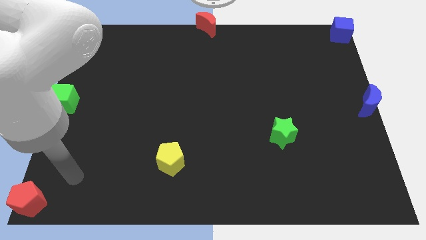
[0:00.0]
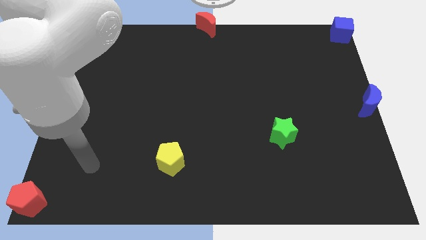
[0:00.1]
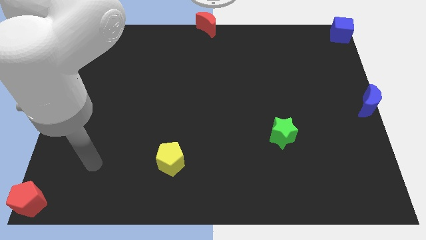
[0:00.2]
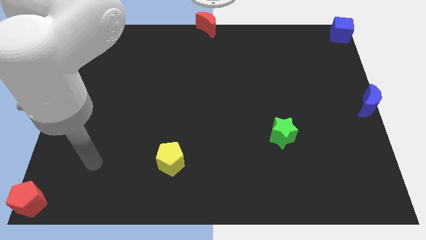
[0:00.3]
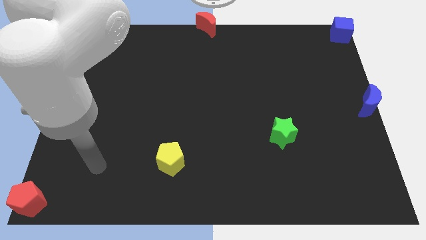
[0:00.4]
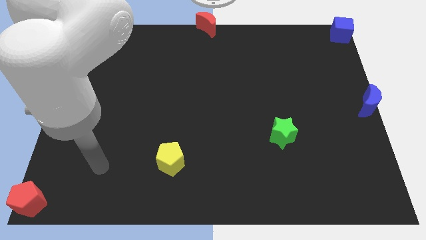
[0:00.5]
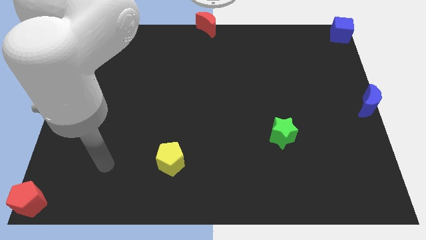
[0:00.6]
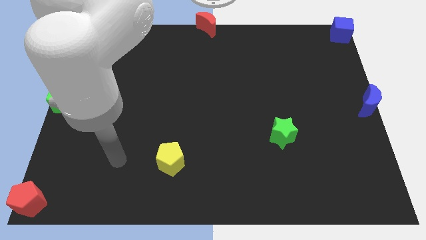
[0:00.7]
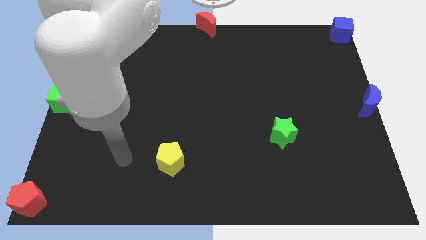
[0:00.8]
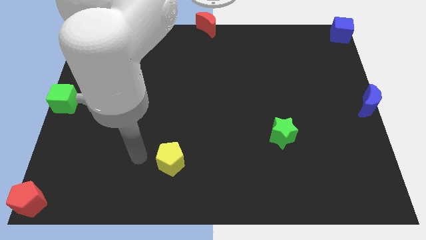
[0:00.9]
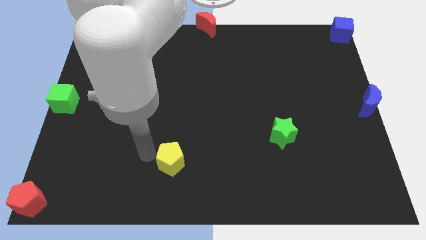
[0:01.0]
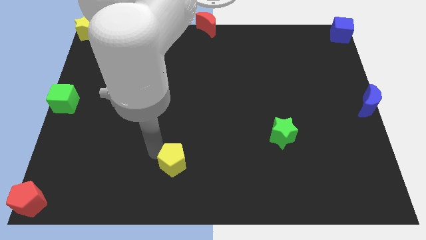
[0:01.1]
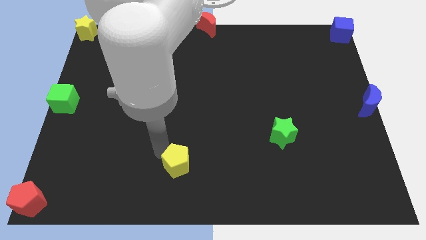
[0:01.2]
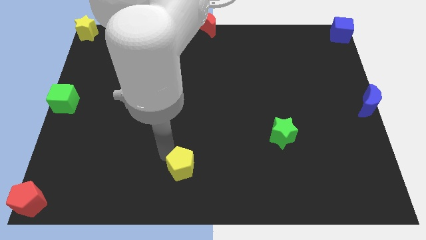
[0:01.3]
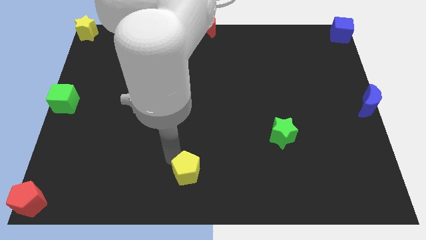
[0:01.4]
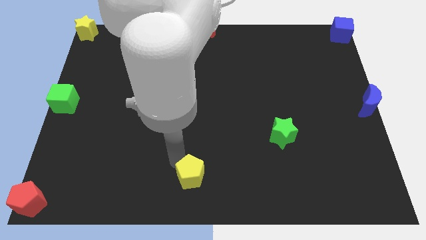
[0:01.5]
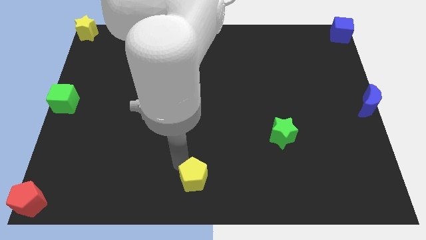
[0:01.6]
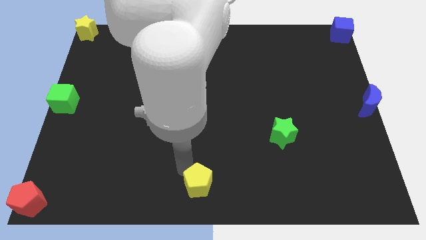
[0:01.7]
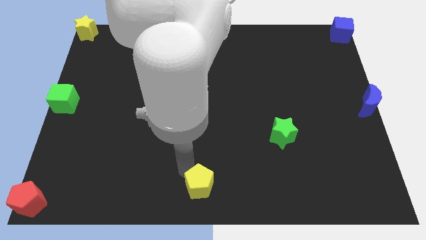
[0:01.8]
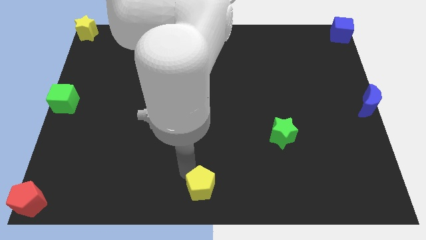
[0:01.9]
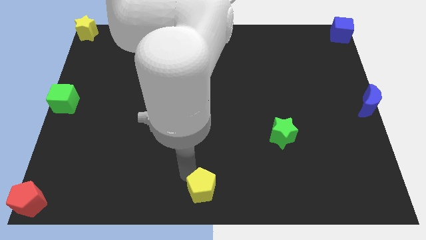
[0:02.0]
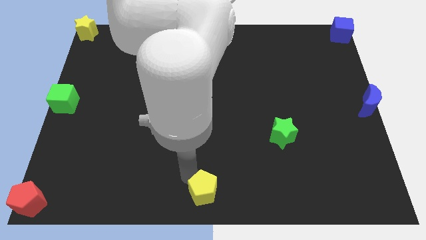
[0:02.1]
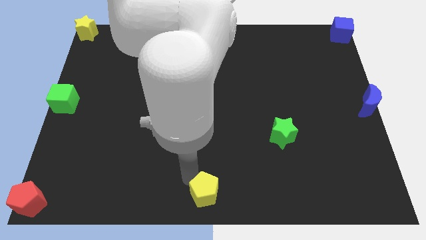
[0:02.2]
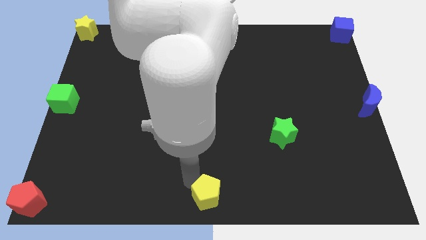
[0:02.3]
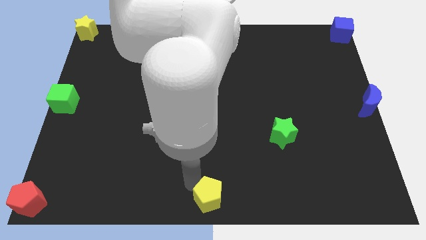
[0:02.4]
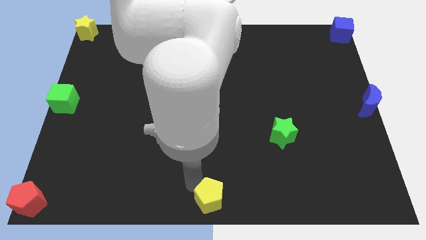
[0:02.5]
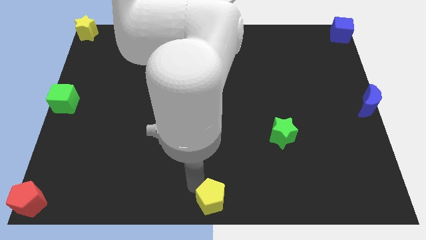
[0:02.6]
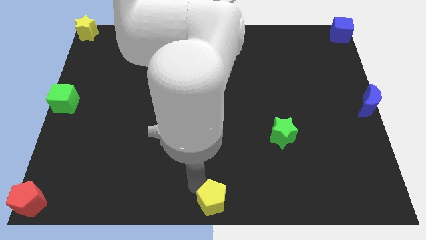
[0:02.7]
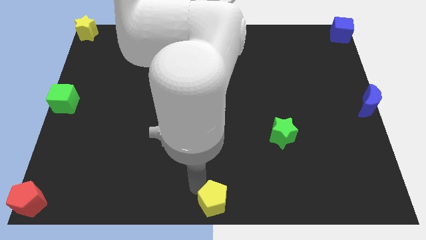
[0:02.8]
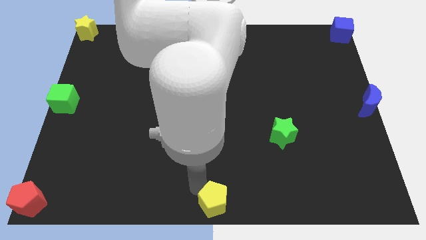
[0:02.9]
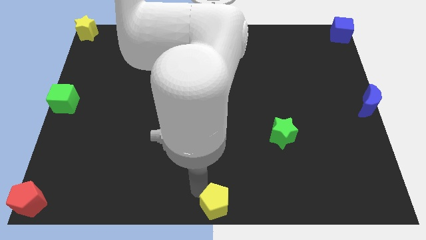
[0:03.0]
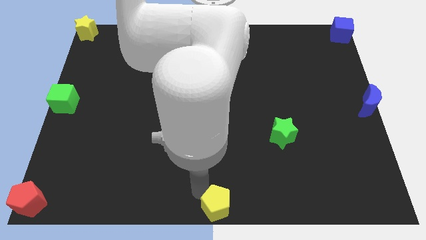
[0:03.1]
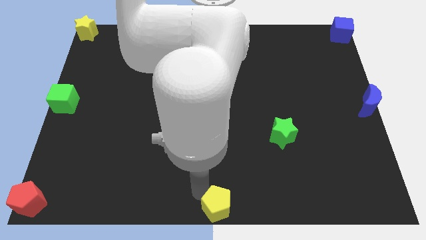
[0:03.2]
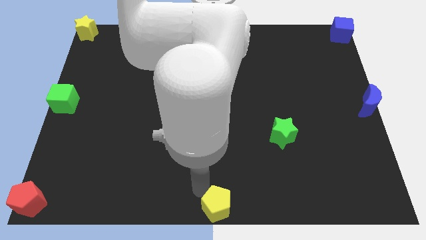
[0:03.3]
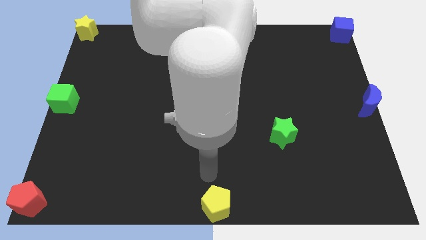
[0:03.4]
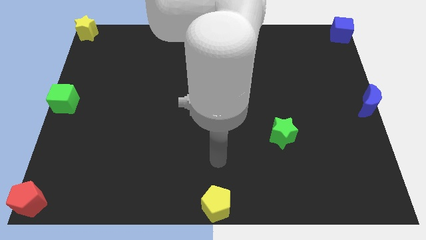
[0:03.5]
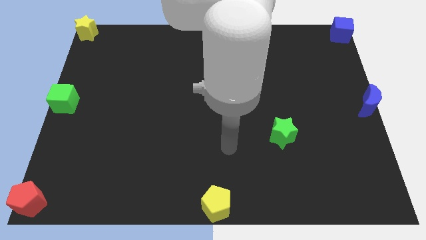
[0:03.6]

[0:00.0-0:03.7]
push the yellow pentagon to the bottom center

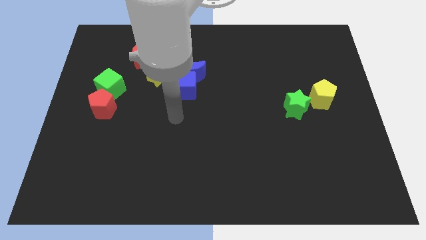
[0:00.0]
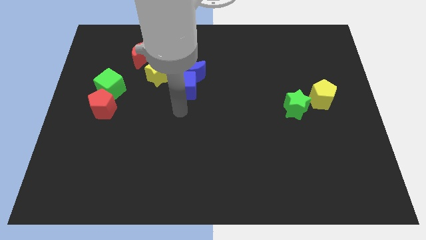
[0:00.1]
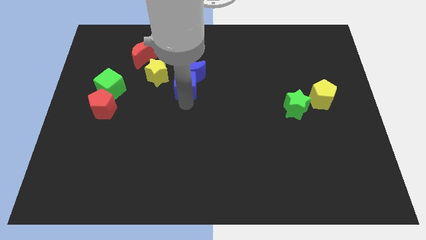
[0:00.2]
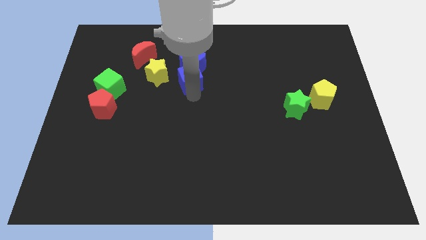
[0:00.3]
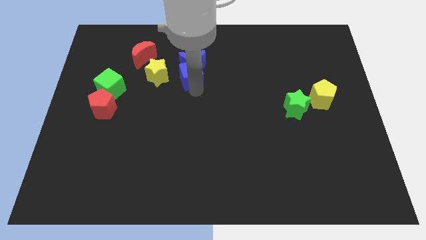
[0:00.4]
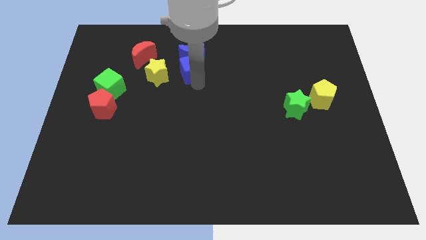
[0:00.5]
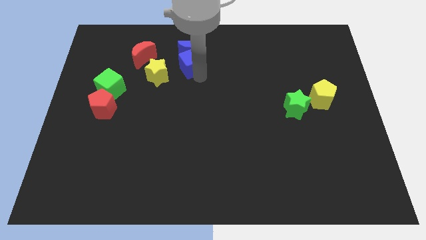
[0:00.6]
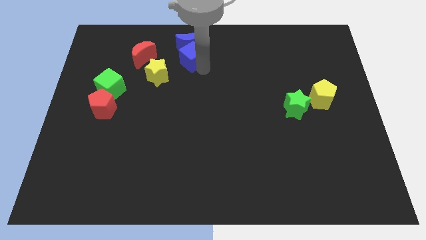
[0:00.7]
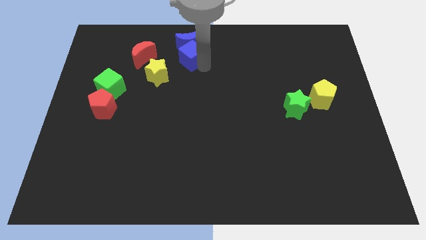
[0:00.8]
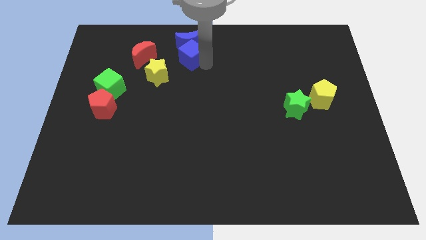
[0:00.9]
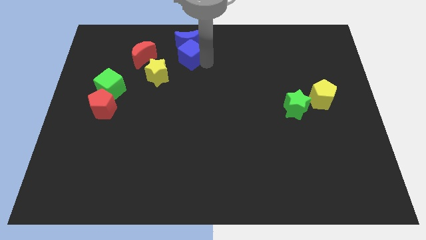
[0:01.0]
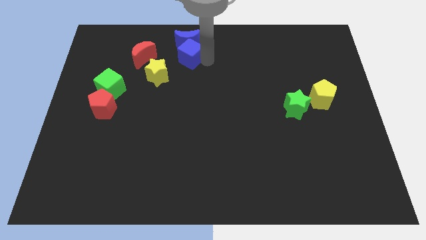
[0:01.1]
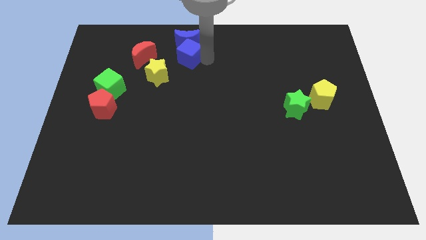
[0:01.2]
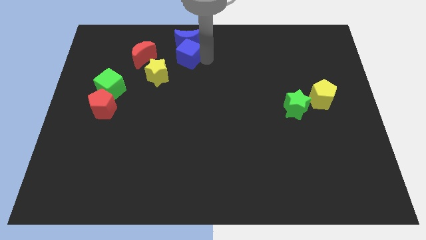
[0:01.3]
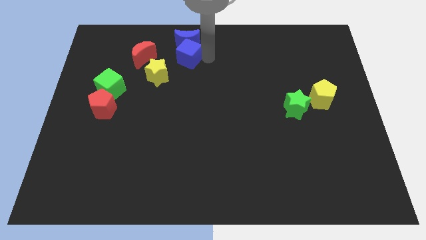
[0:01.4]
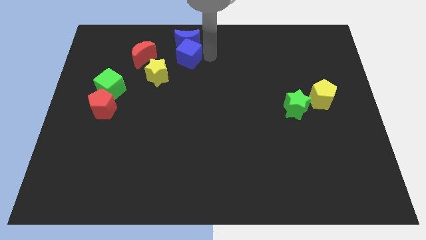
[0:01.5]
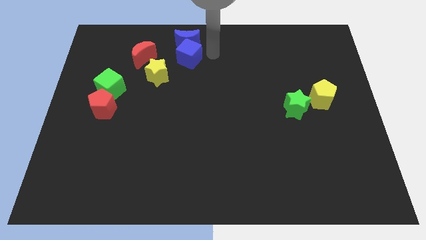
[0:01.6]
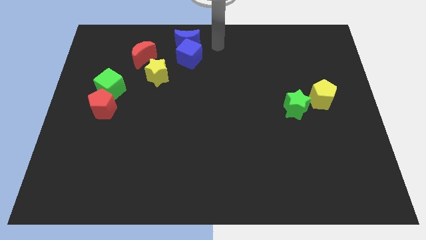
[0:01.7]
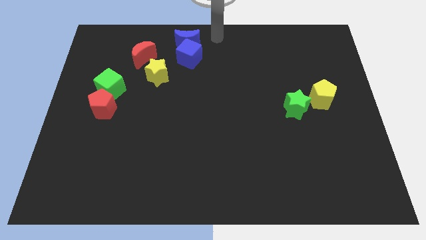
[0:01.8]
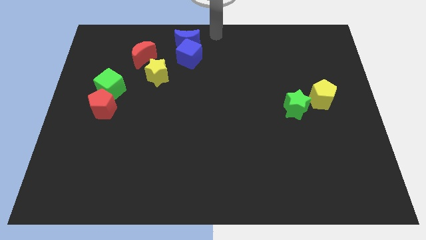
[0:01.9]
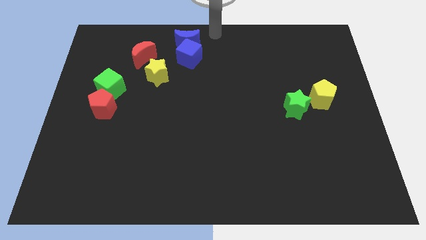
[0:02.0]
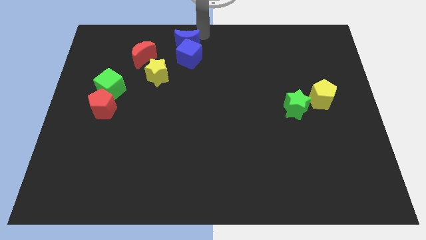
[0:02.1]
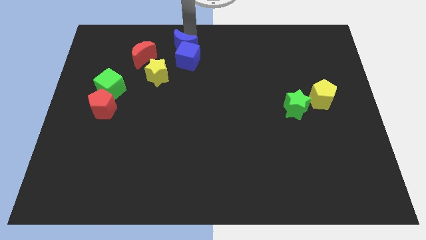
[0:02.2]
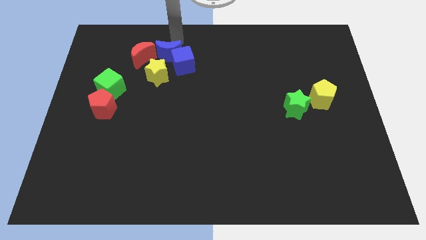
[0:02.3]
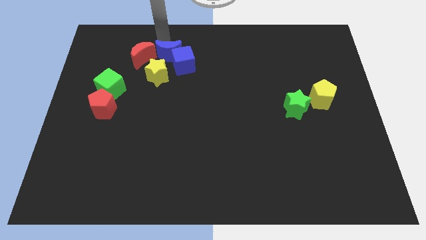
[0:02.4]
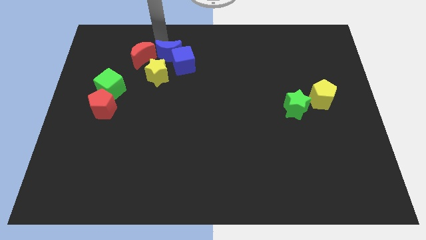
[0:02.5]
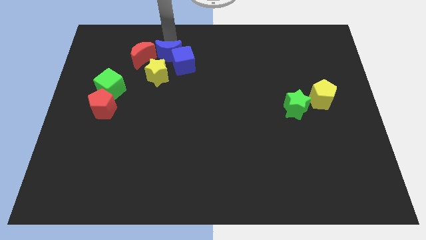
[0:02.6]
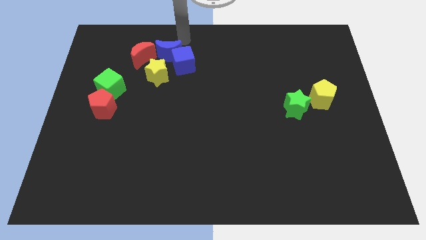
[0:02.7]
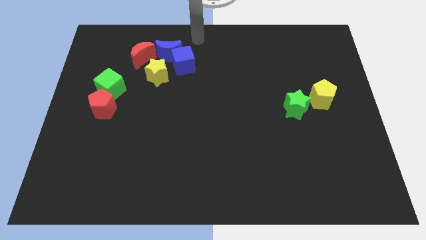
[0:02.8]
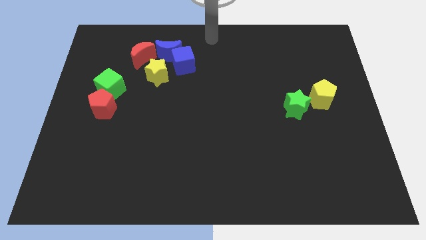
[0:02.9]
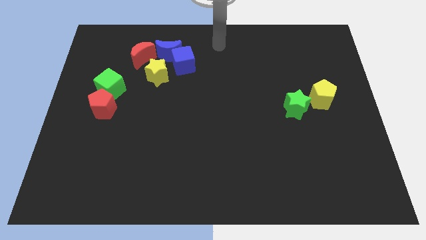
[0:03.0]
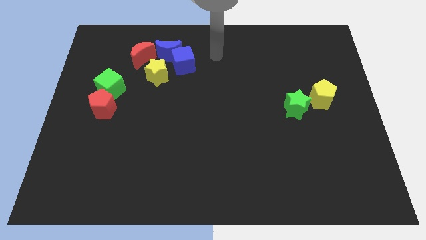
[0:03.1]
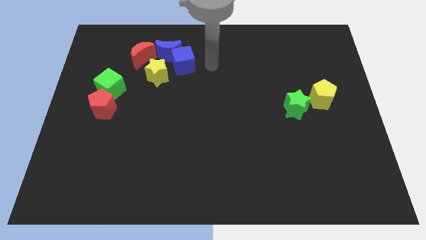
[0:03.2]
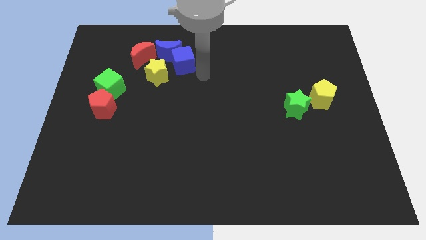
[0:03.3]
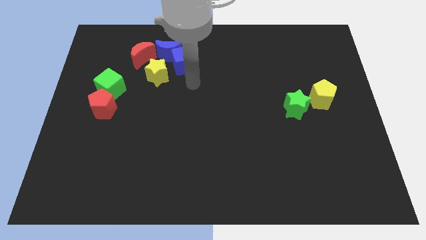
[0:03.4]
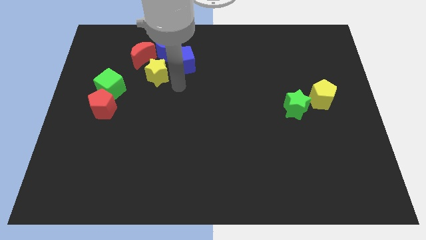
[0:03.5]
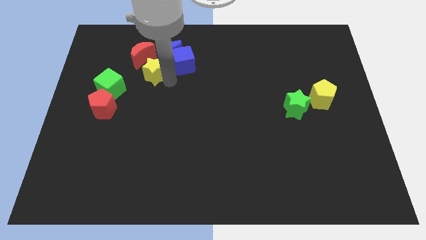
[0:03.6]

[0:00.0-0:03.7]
place the arm near the yellow star

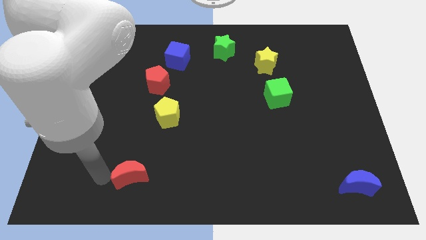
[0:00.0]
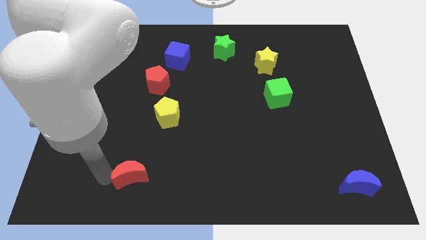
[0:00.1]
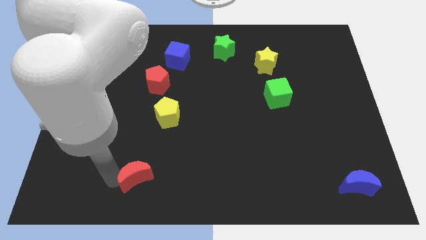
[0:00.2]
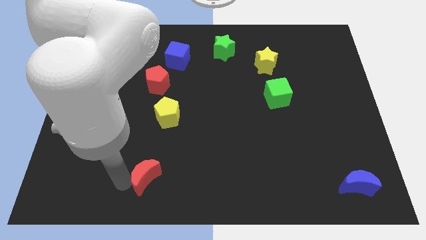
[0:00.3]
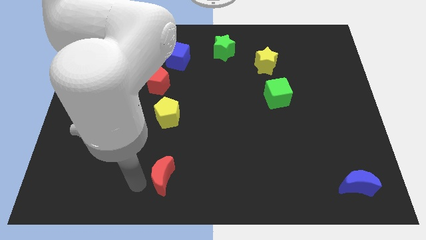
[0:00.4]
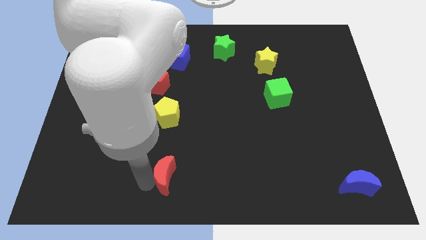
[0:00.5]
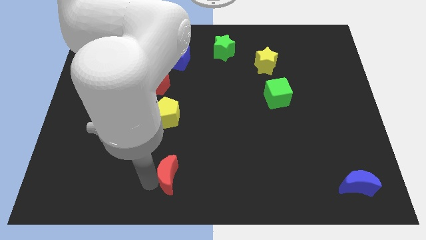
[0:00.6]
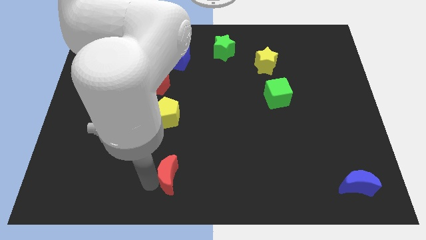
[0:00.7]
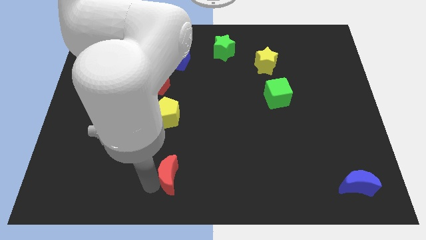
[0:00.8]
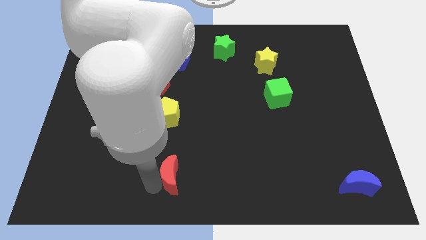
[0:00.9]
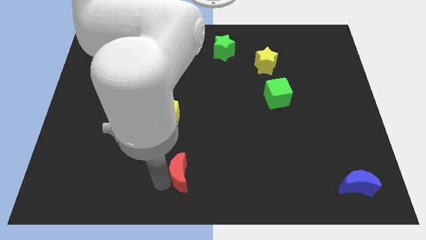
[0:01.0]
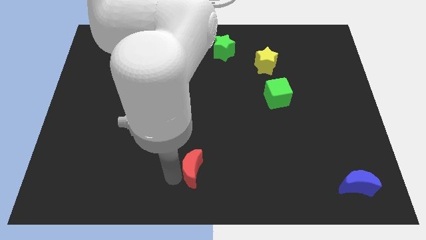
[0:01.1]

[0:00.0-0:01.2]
slide the red crescent slightly to the right

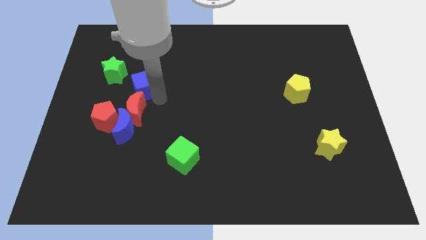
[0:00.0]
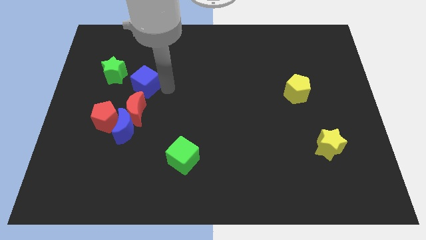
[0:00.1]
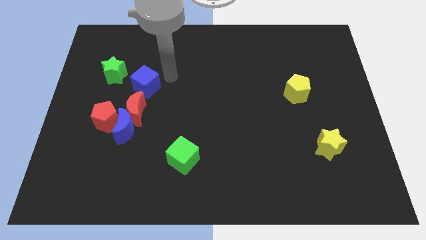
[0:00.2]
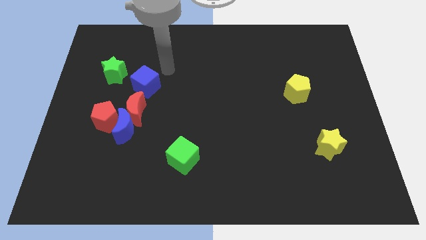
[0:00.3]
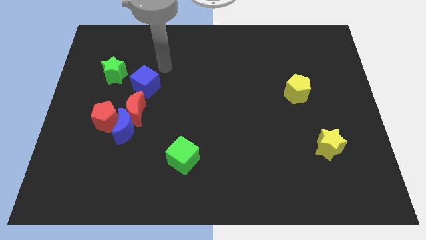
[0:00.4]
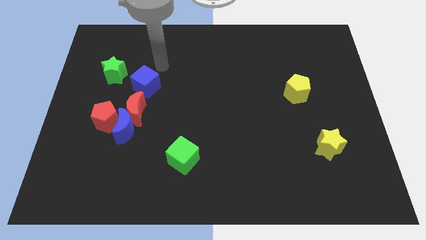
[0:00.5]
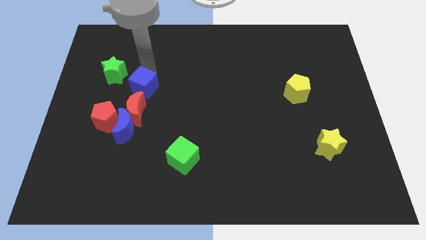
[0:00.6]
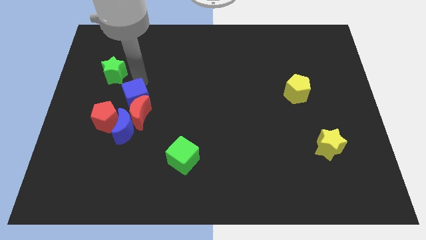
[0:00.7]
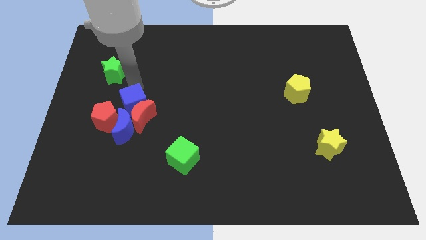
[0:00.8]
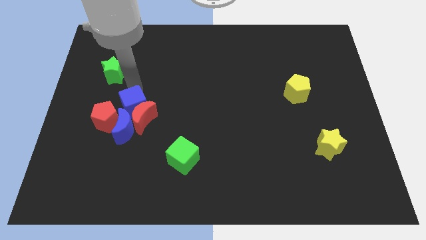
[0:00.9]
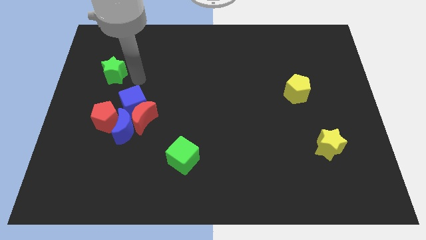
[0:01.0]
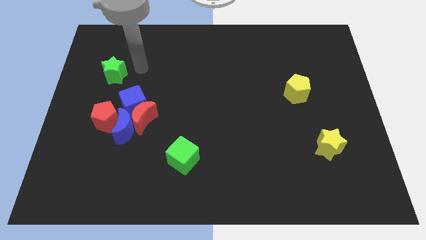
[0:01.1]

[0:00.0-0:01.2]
push the blue cube into the blue moon
